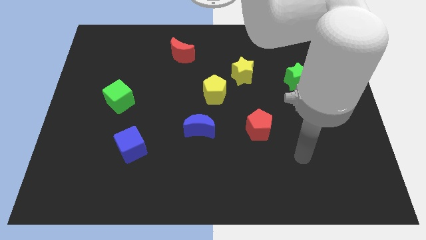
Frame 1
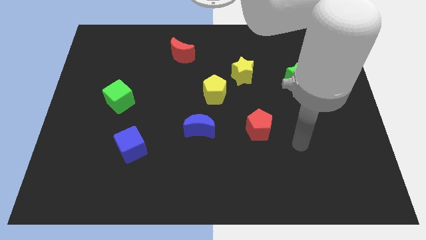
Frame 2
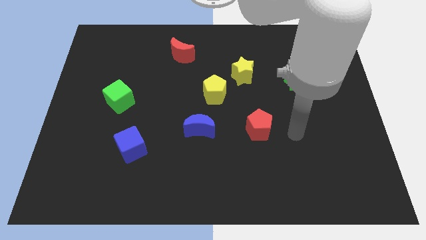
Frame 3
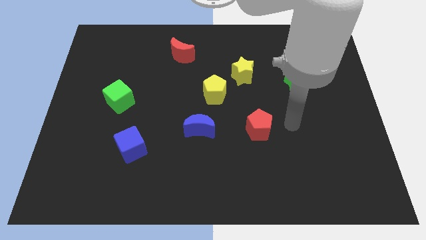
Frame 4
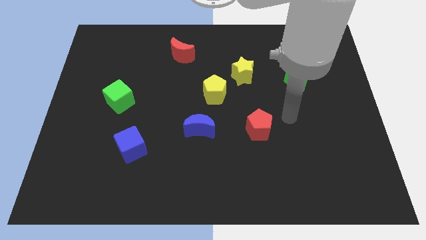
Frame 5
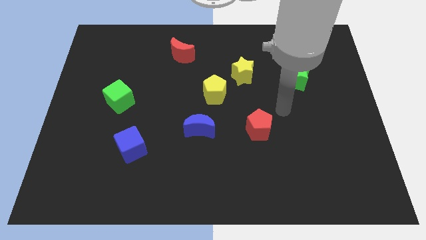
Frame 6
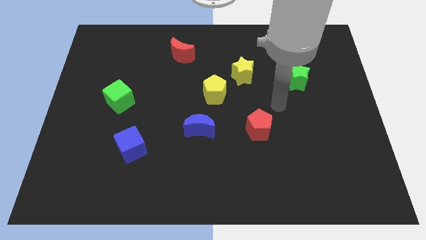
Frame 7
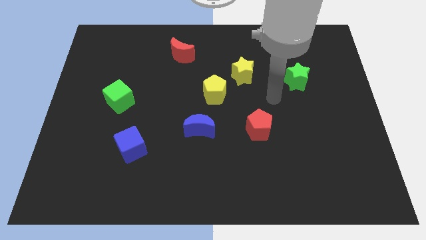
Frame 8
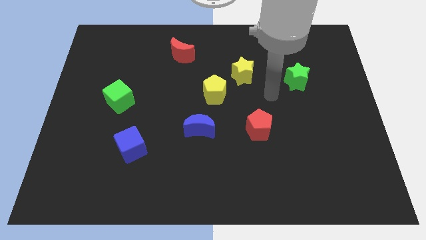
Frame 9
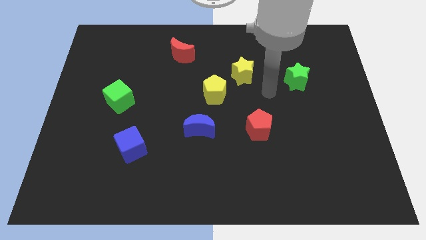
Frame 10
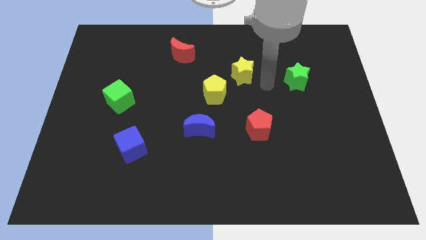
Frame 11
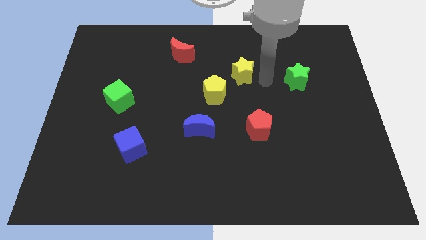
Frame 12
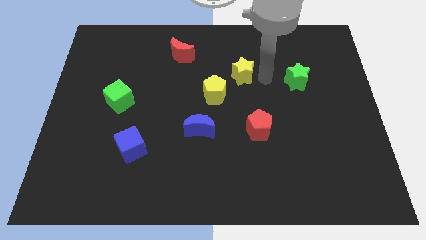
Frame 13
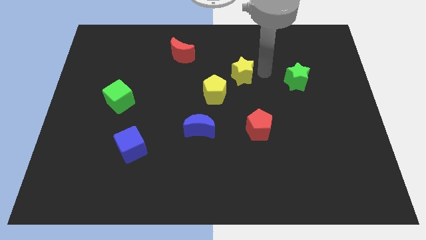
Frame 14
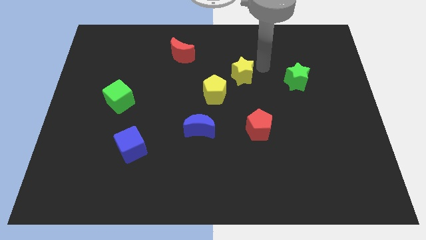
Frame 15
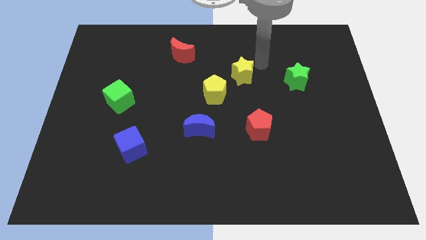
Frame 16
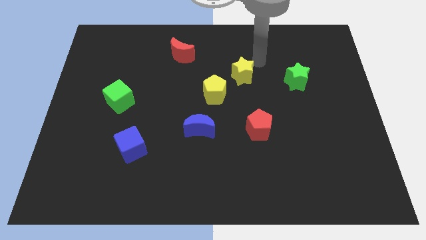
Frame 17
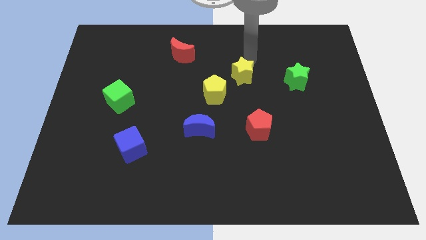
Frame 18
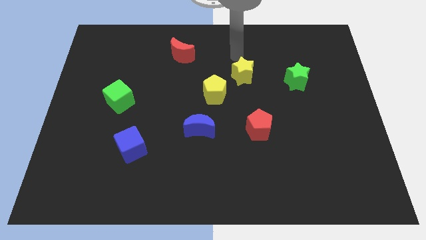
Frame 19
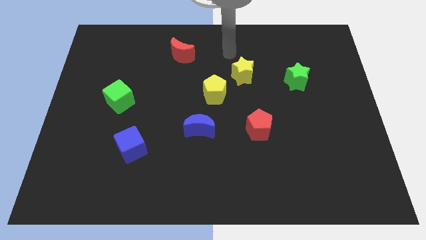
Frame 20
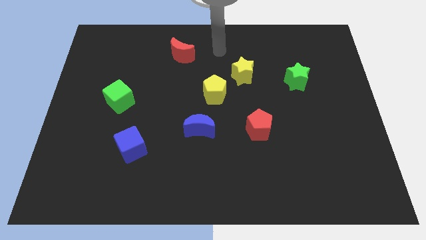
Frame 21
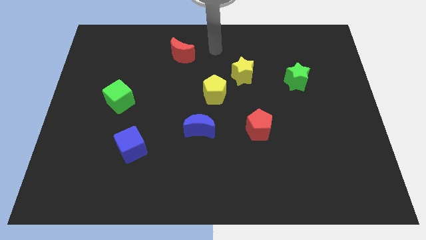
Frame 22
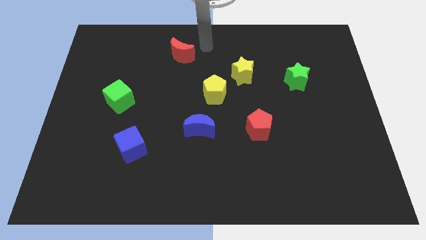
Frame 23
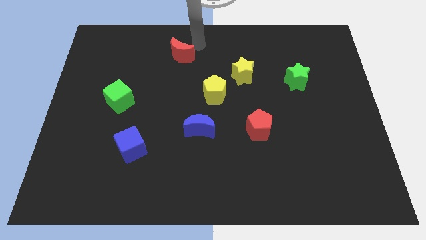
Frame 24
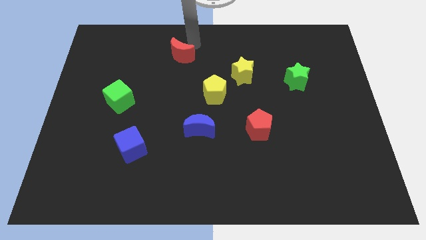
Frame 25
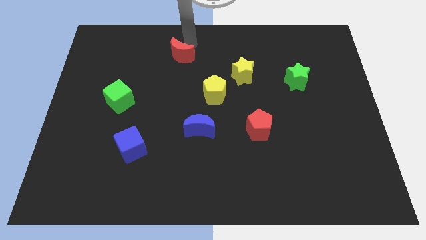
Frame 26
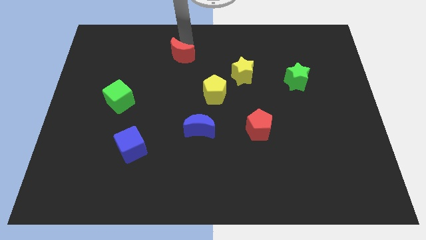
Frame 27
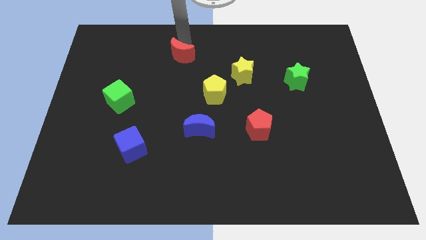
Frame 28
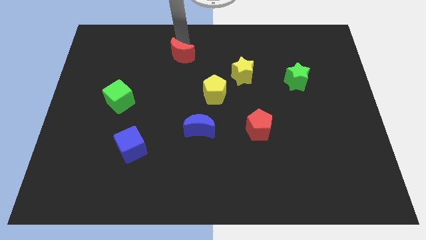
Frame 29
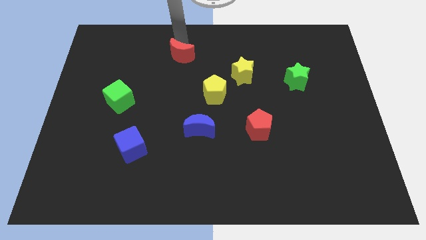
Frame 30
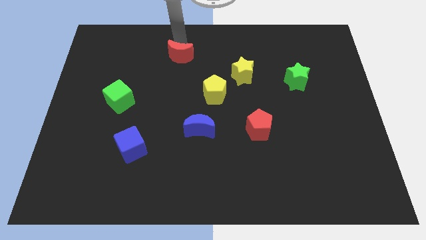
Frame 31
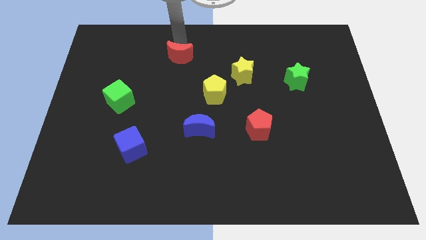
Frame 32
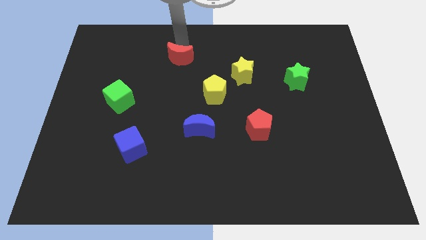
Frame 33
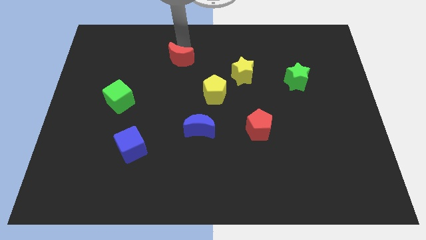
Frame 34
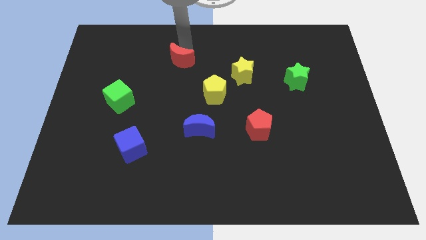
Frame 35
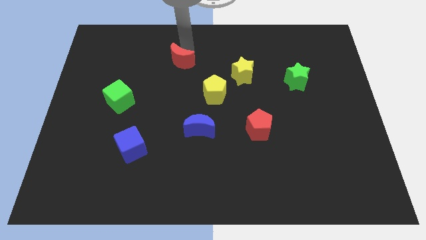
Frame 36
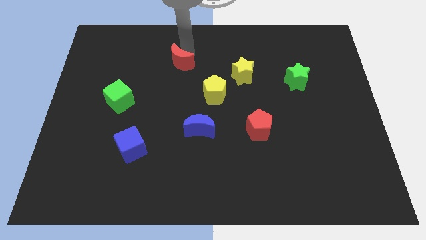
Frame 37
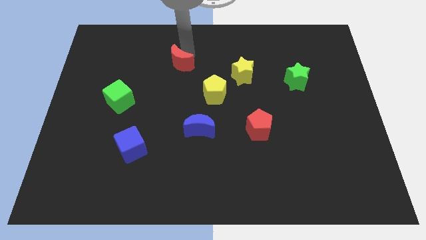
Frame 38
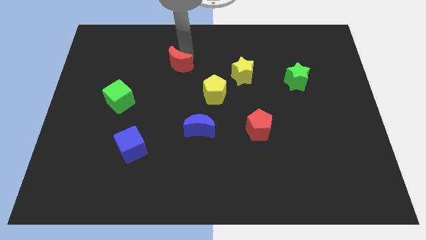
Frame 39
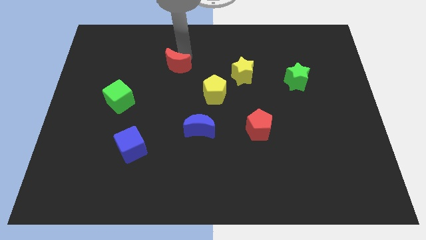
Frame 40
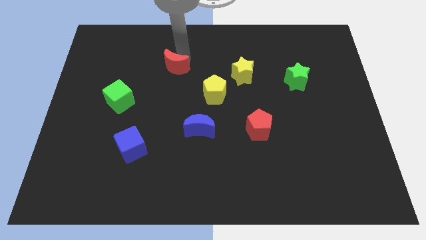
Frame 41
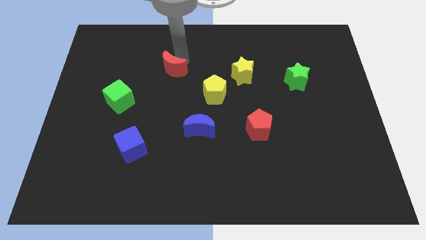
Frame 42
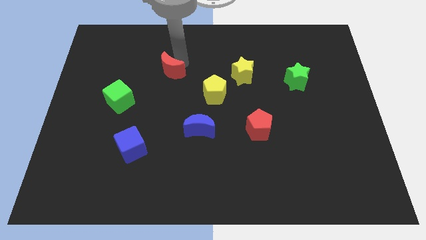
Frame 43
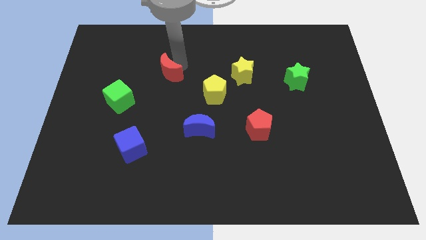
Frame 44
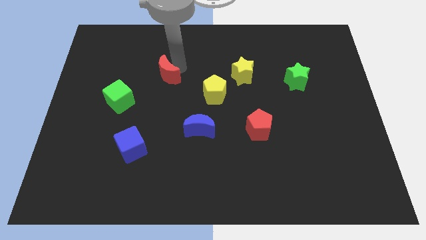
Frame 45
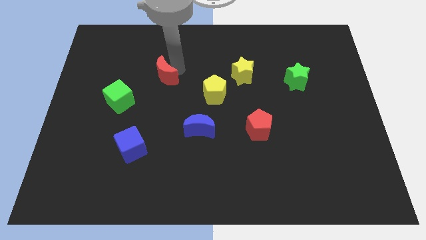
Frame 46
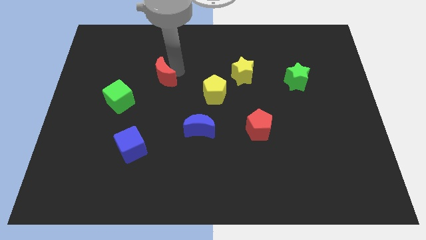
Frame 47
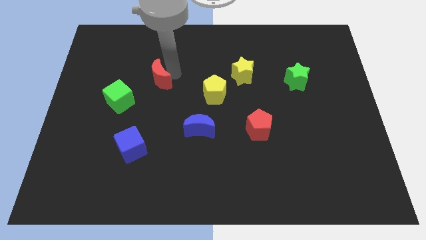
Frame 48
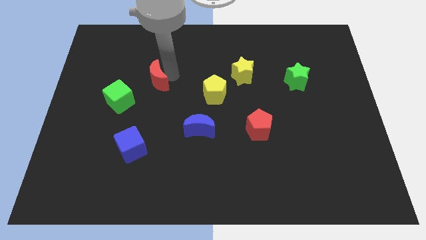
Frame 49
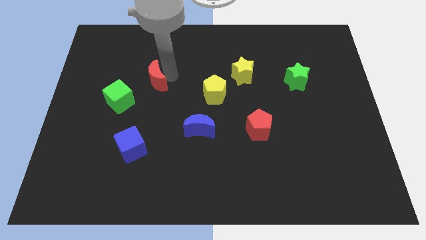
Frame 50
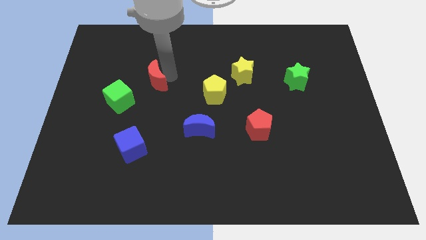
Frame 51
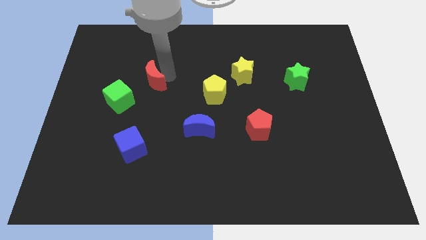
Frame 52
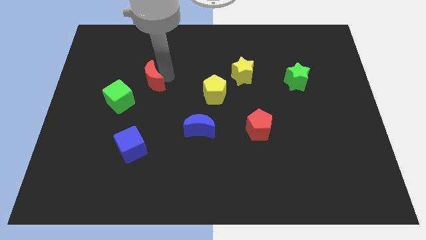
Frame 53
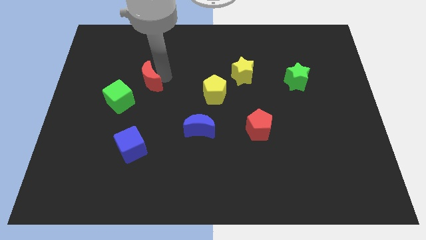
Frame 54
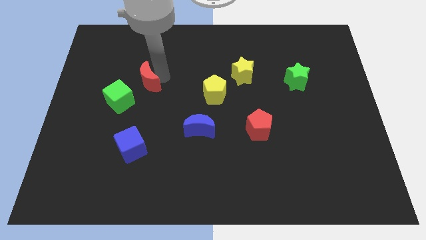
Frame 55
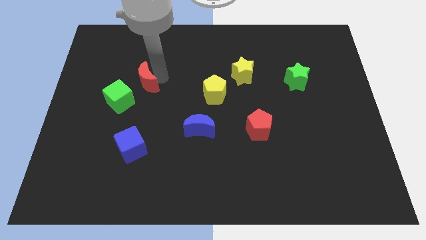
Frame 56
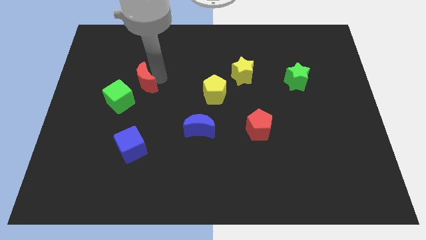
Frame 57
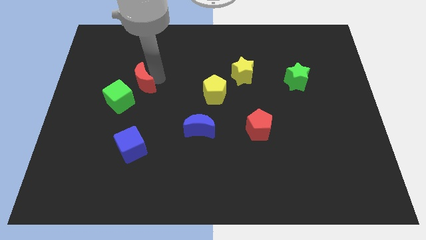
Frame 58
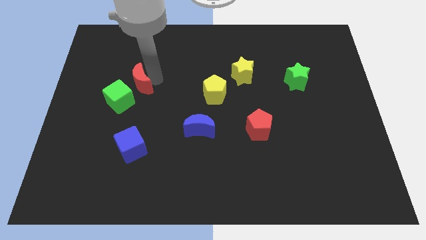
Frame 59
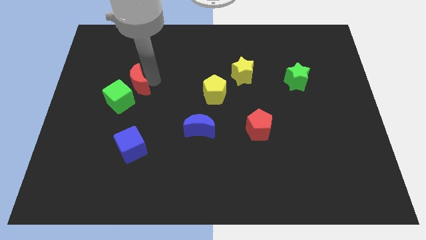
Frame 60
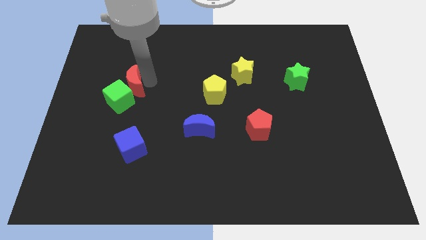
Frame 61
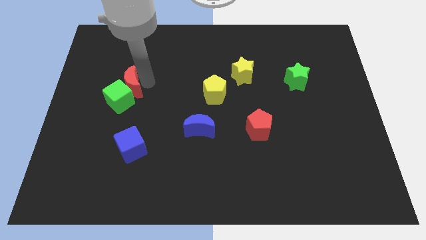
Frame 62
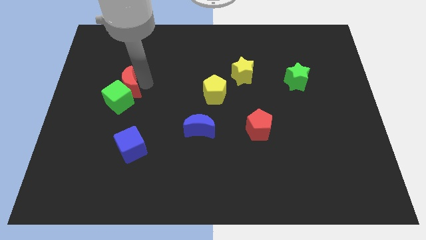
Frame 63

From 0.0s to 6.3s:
slide the red moon towards the green cube

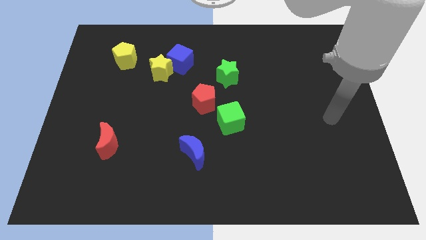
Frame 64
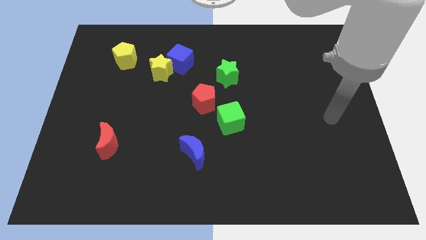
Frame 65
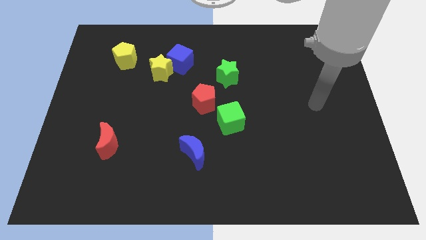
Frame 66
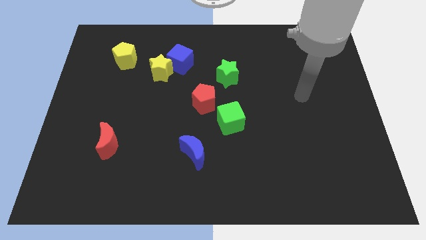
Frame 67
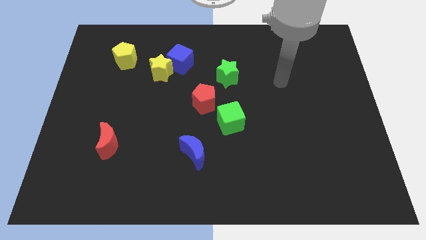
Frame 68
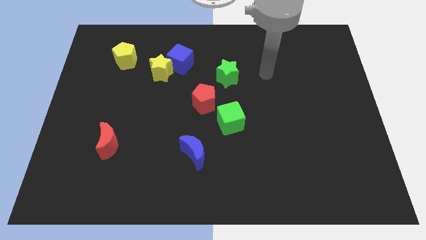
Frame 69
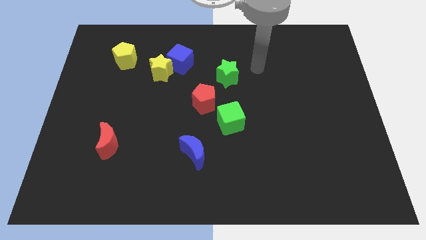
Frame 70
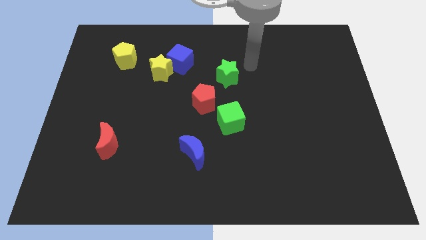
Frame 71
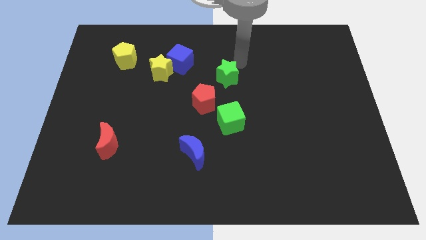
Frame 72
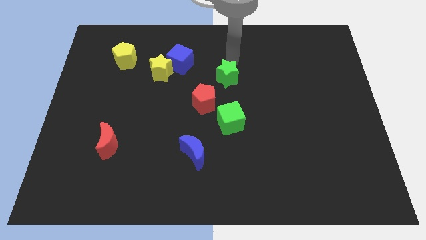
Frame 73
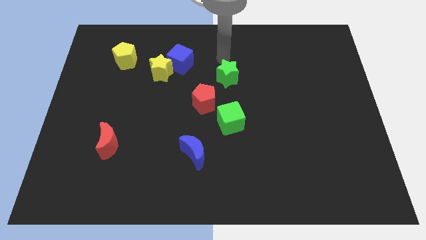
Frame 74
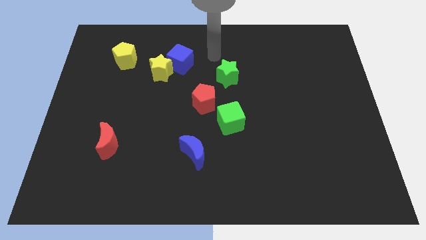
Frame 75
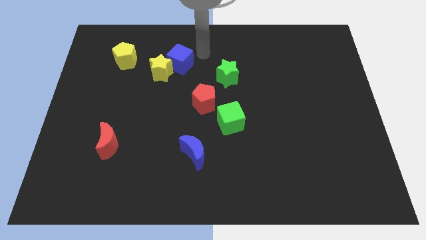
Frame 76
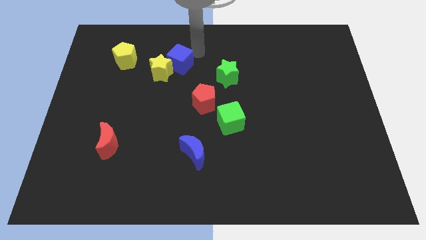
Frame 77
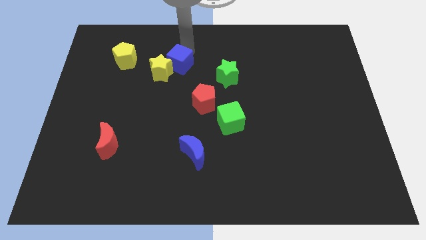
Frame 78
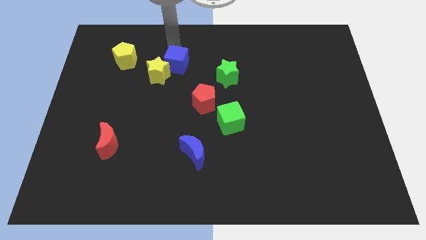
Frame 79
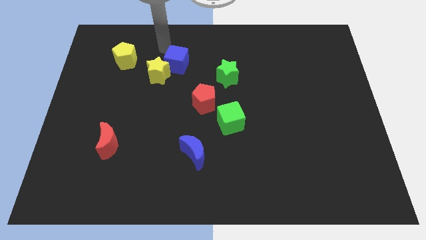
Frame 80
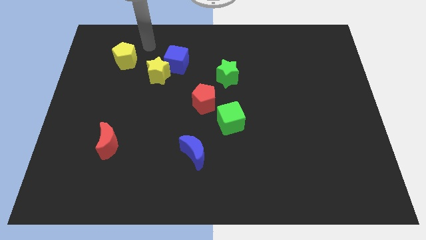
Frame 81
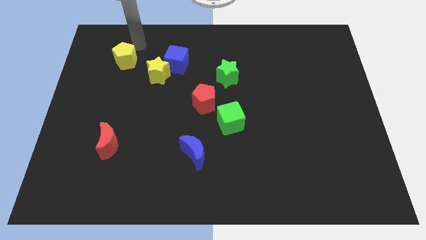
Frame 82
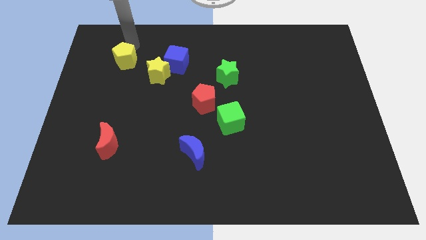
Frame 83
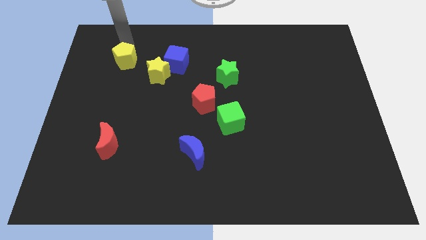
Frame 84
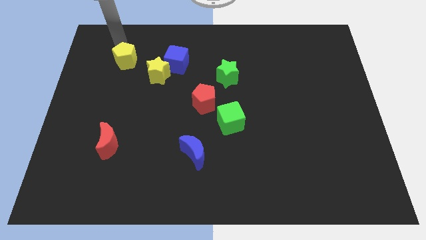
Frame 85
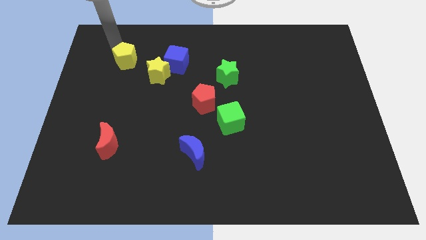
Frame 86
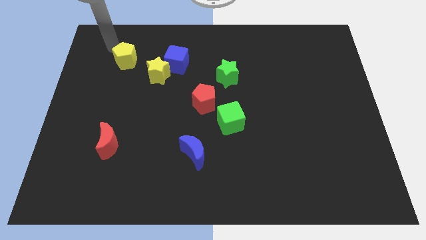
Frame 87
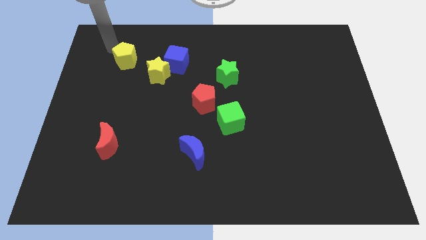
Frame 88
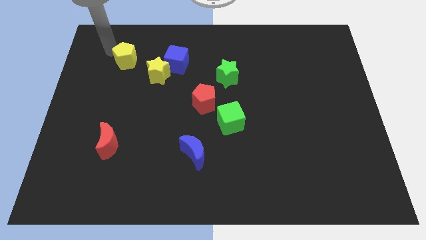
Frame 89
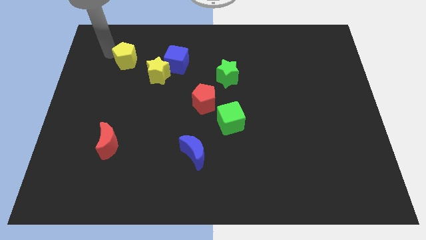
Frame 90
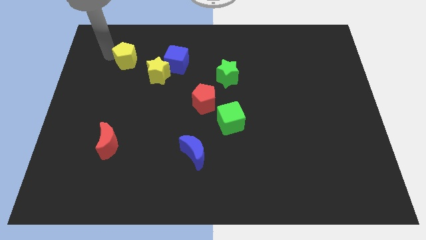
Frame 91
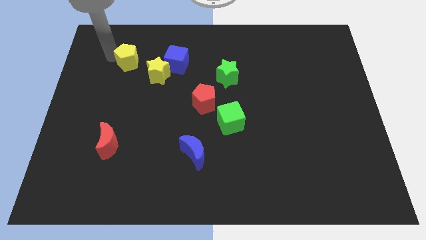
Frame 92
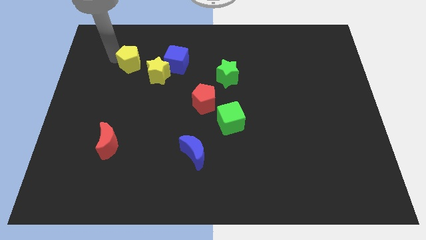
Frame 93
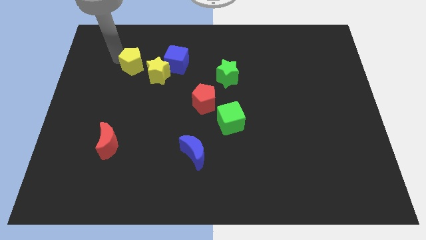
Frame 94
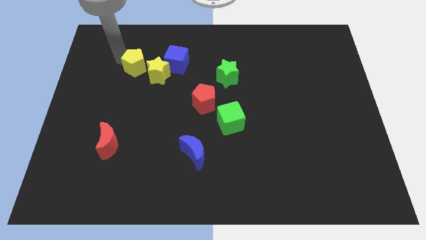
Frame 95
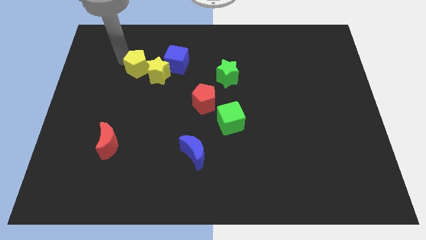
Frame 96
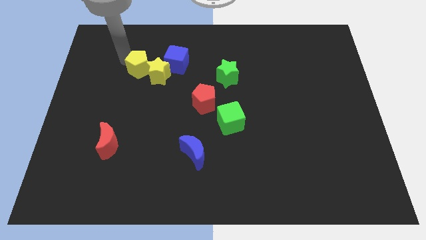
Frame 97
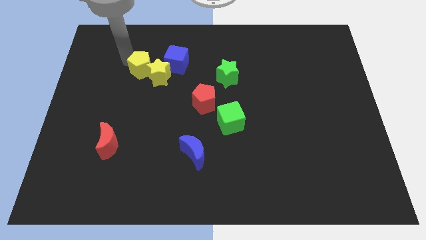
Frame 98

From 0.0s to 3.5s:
move the yellow pentagon to the yellow star
